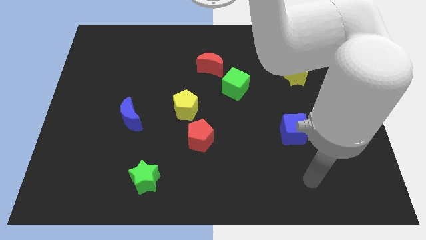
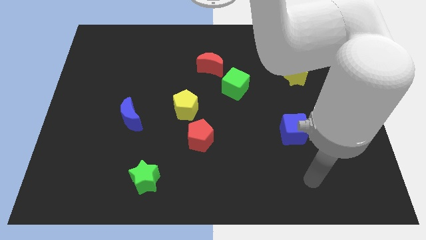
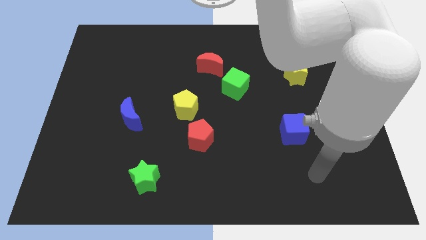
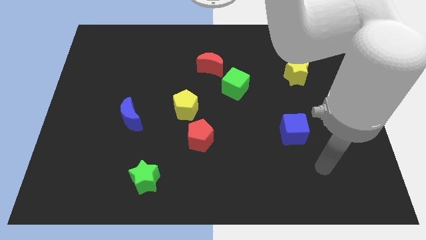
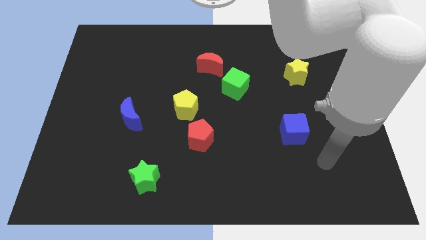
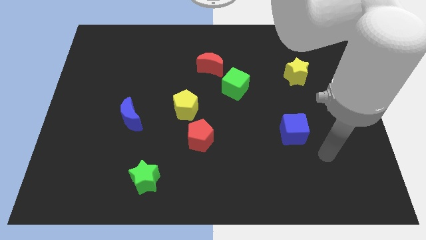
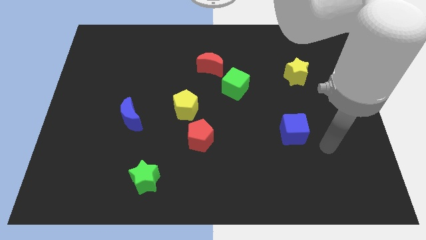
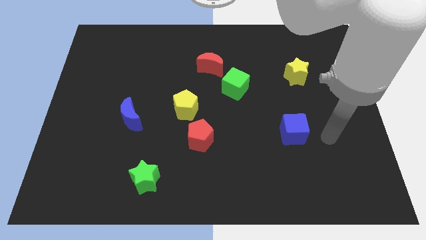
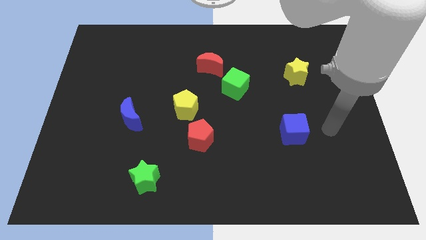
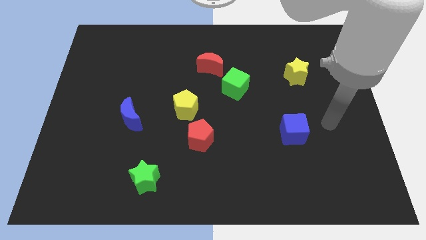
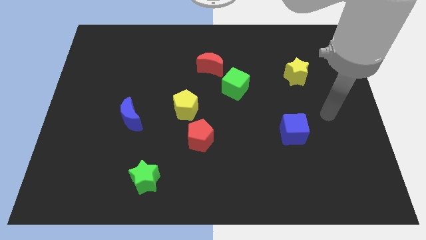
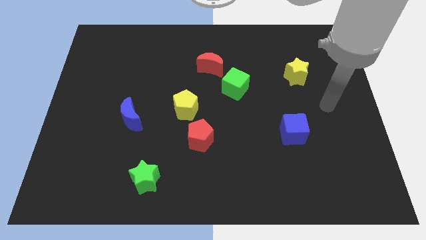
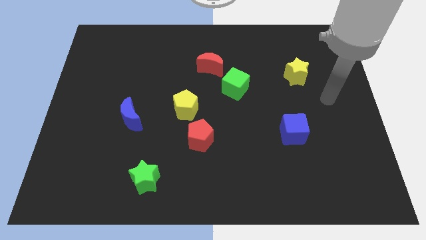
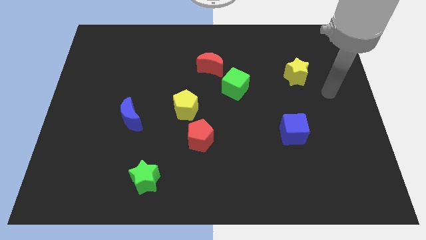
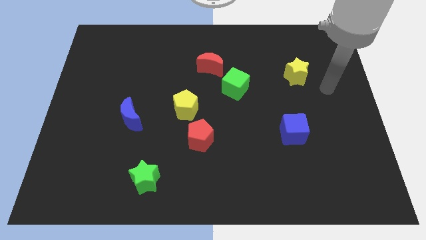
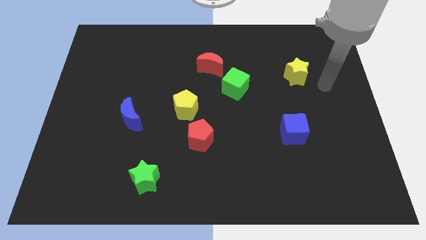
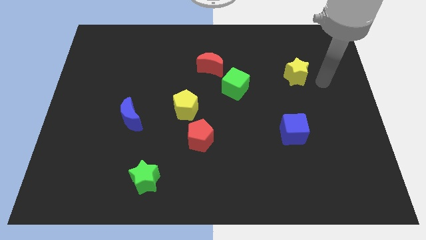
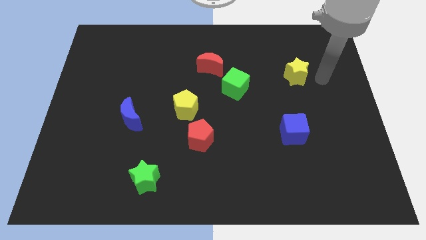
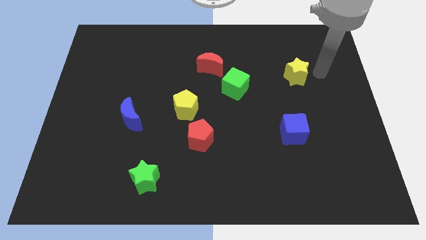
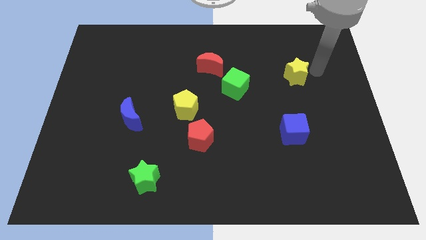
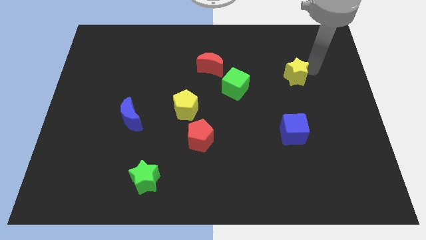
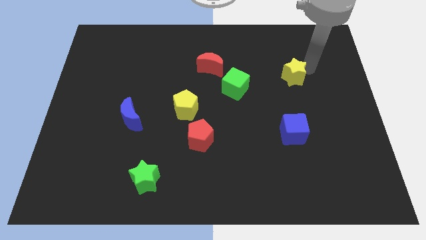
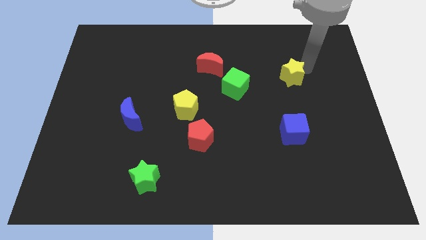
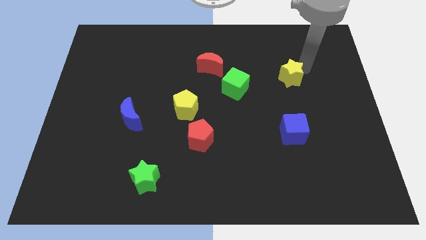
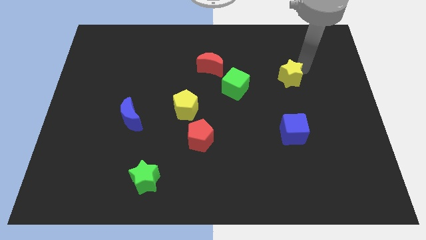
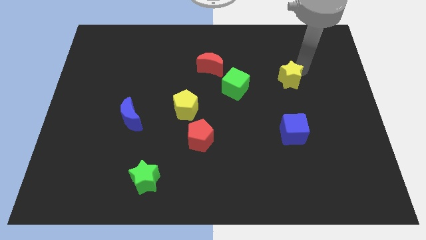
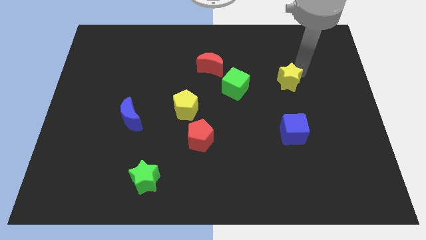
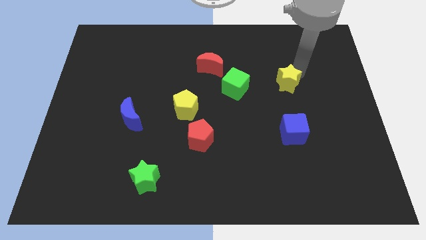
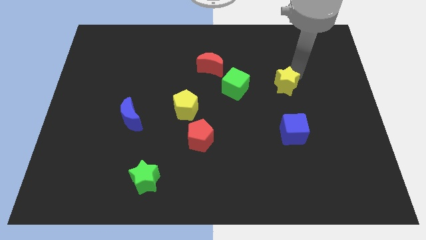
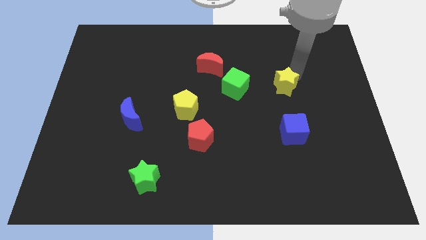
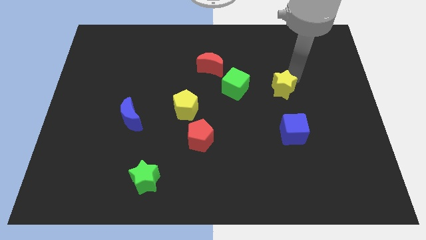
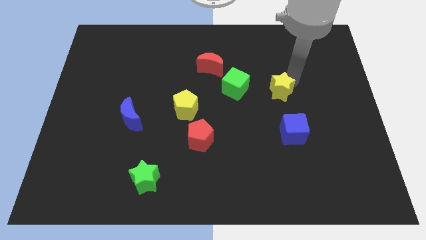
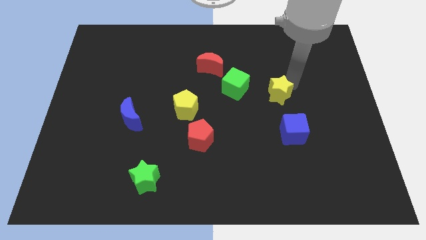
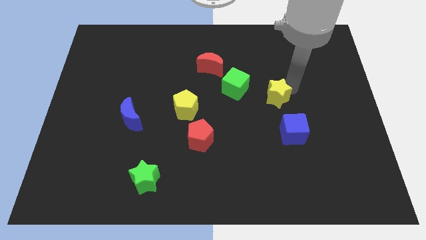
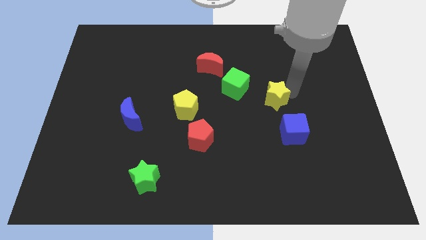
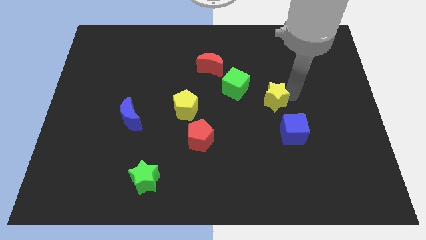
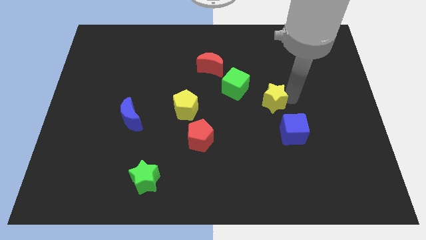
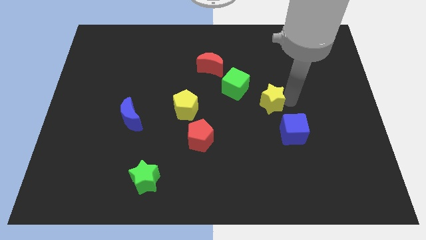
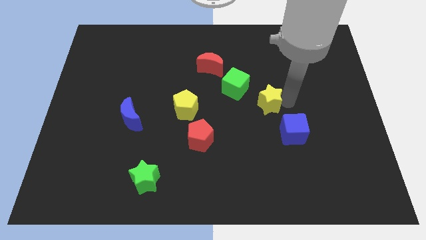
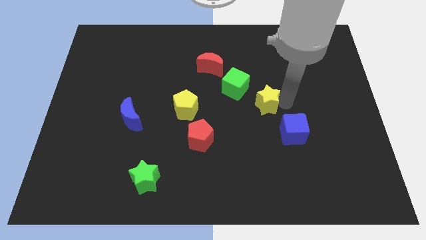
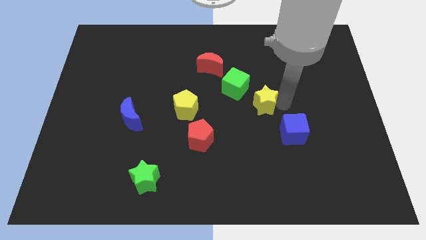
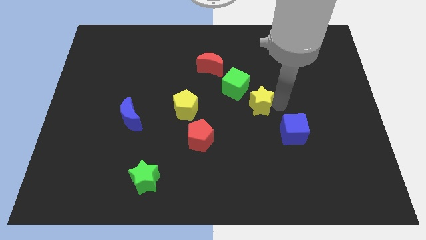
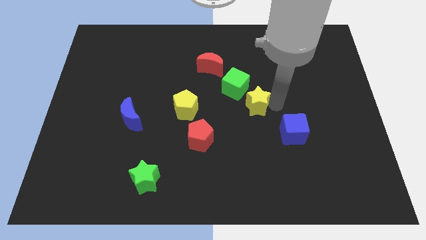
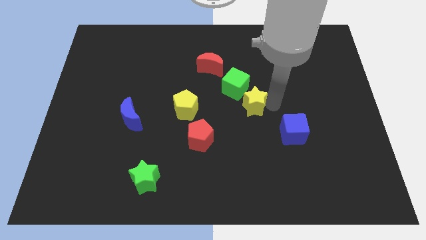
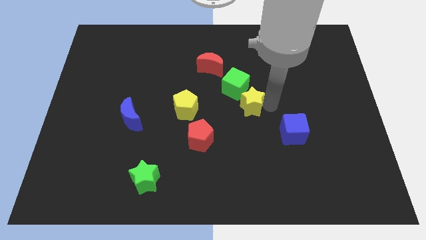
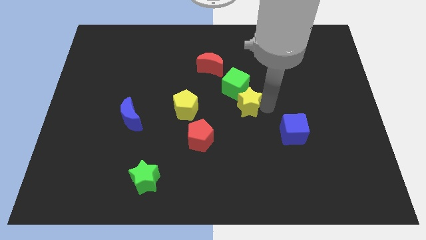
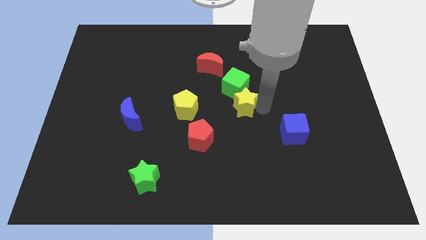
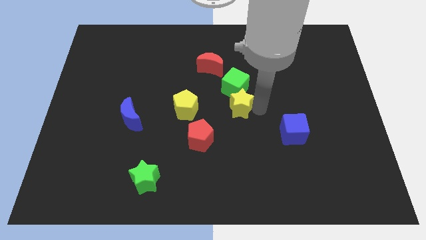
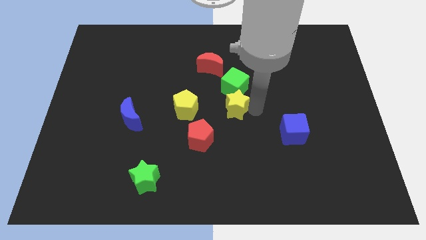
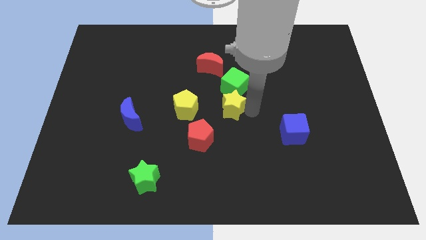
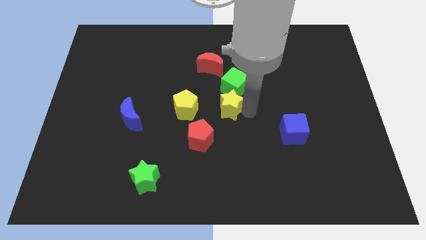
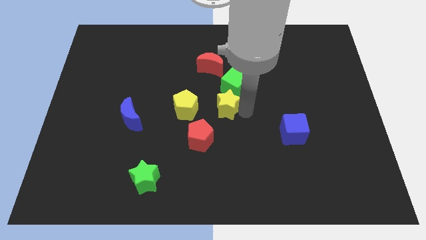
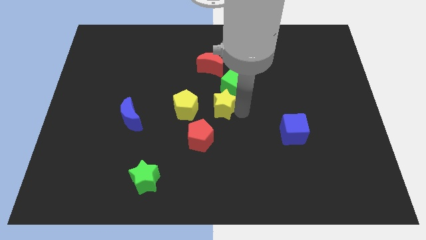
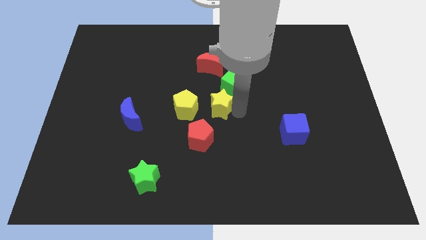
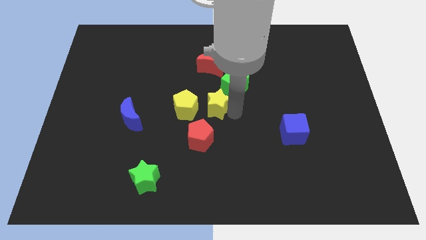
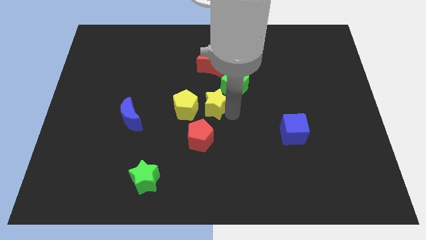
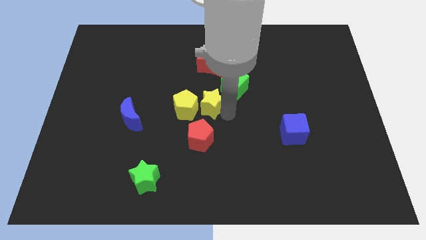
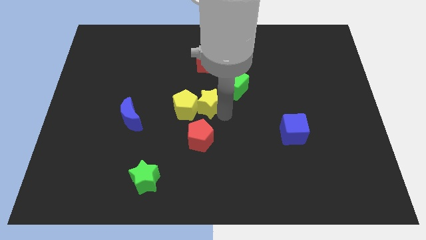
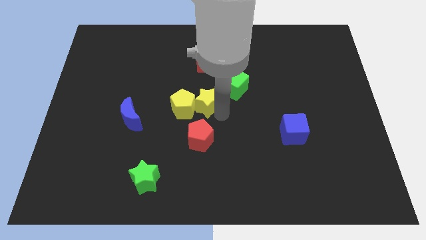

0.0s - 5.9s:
move the yellow star next to the yellow pentagon

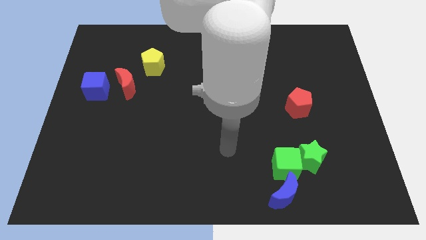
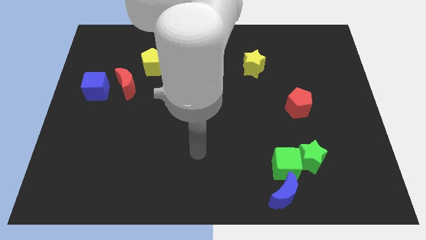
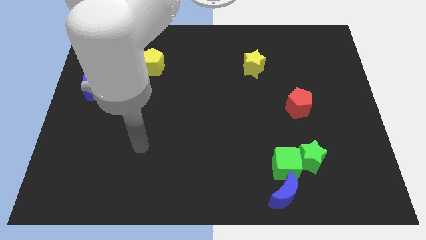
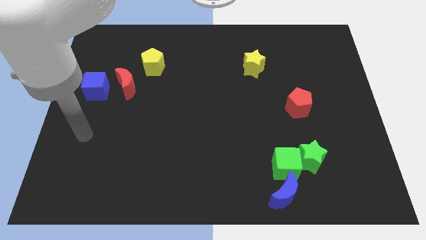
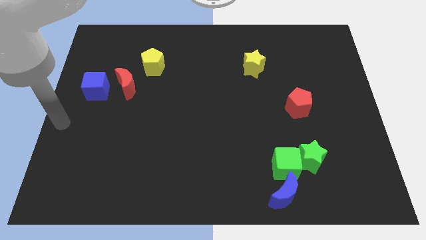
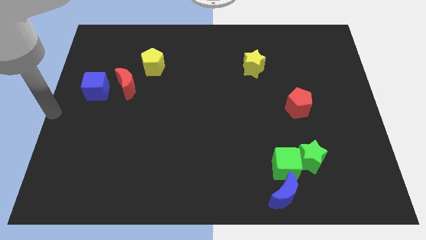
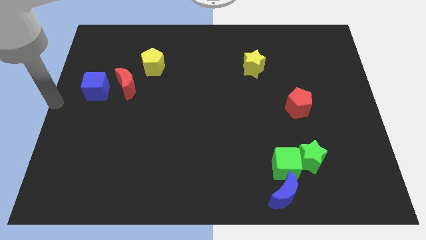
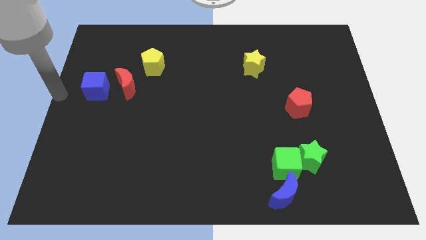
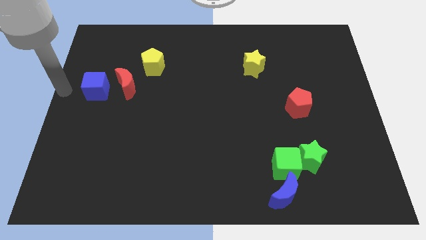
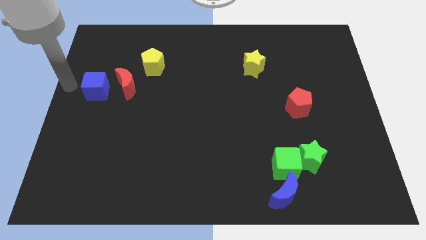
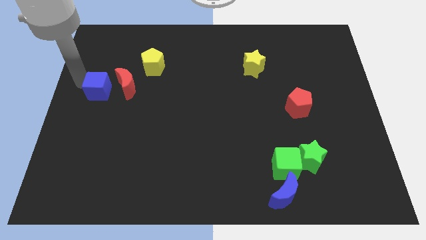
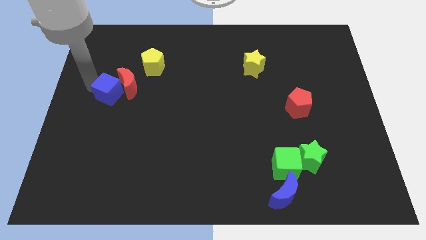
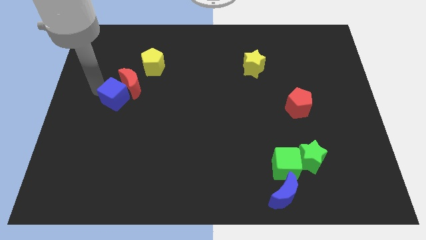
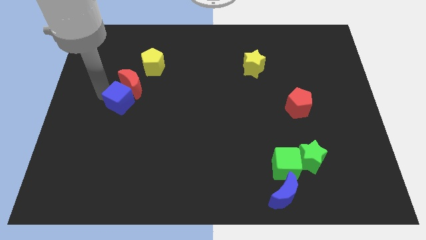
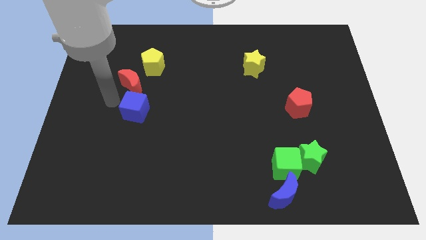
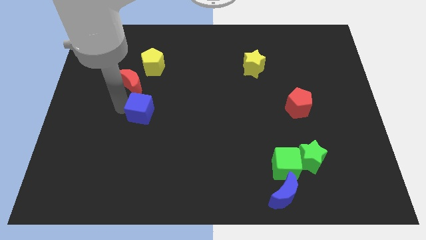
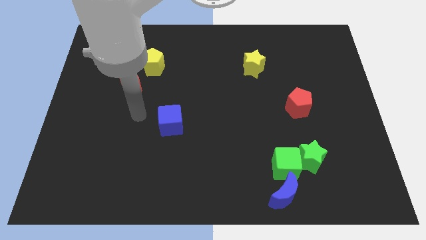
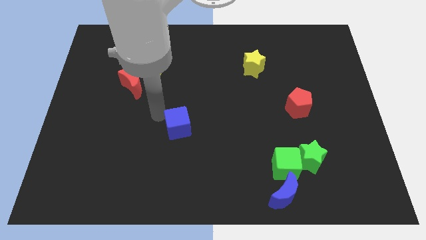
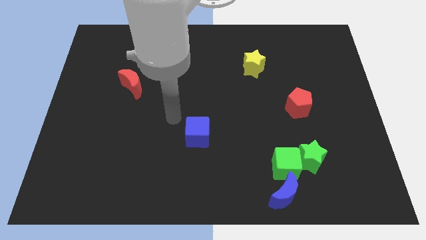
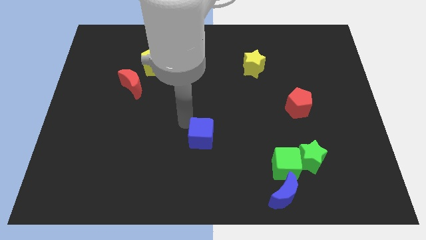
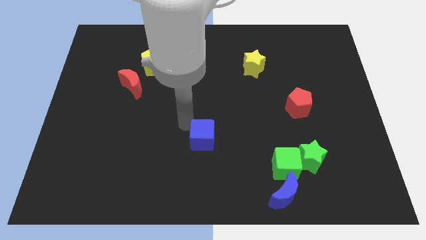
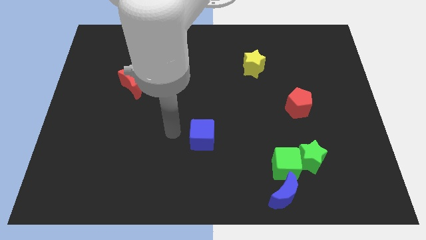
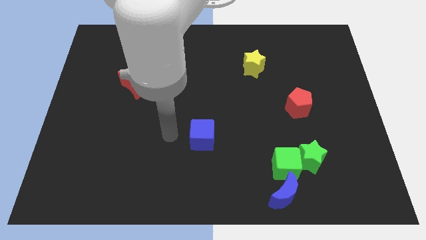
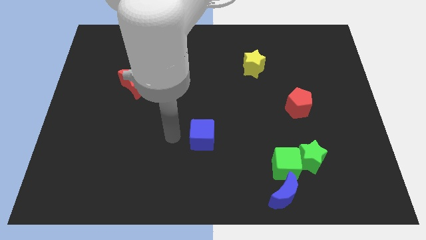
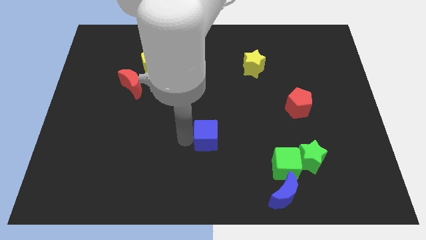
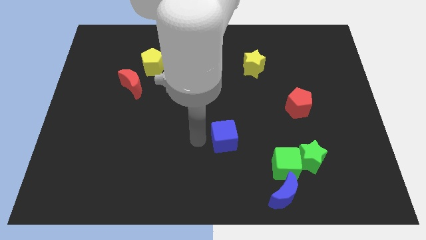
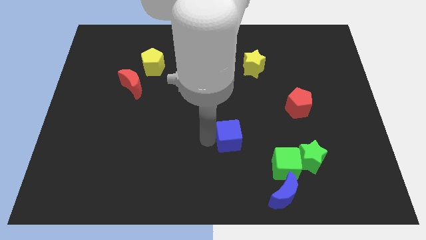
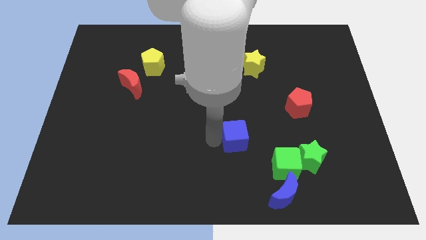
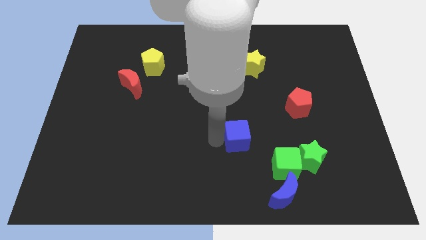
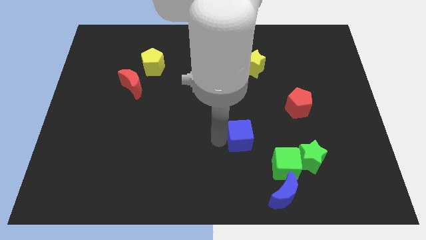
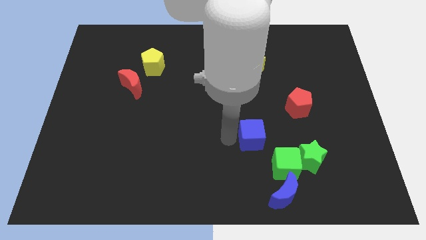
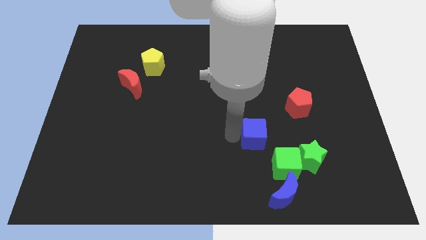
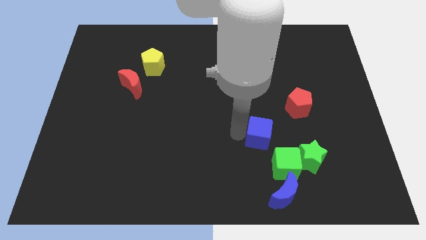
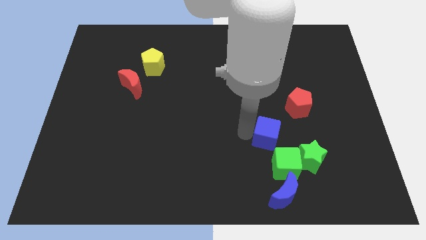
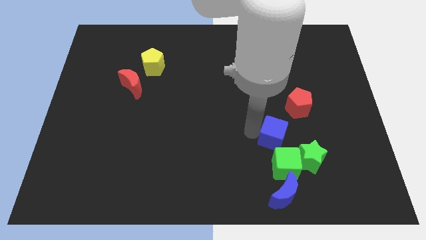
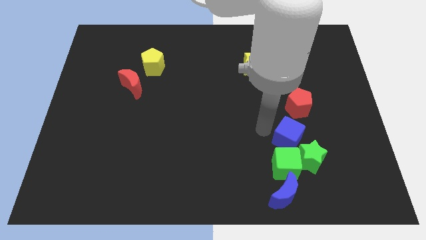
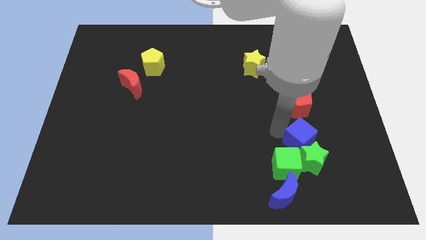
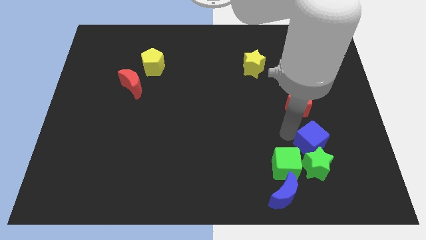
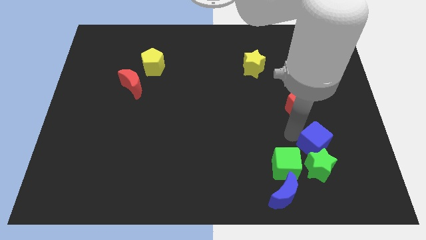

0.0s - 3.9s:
slide the blue cube close to the green star
